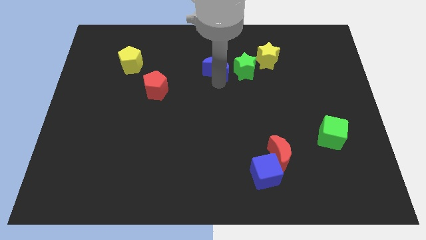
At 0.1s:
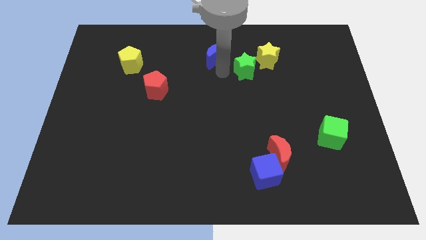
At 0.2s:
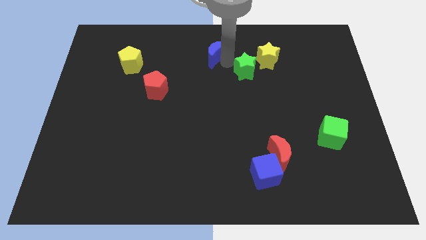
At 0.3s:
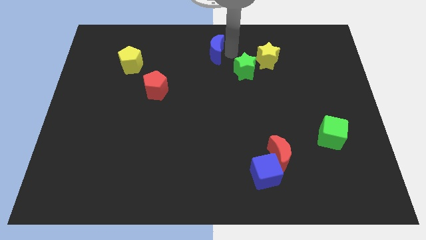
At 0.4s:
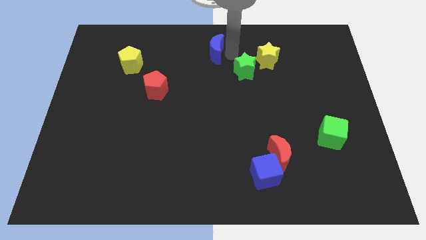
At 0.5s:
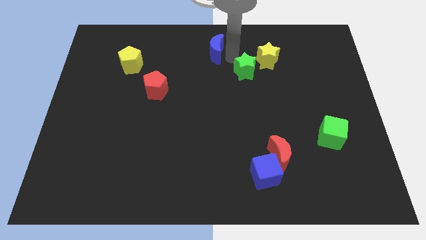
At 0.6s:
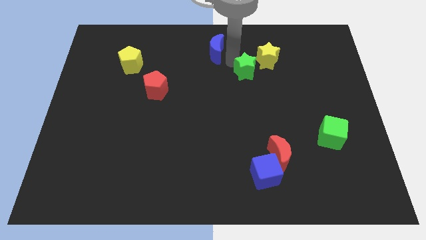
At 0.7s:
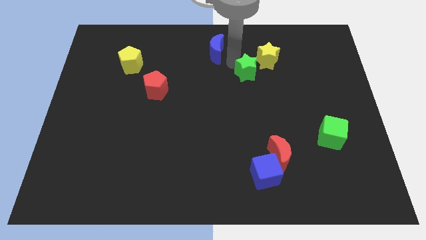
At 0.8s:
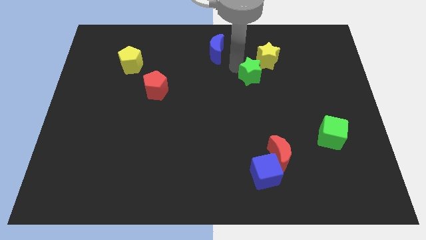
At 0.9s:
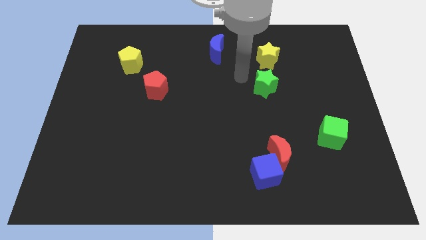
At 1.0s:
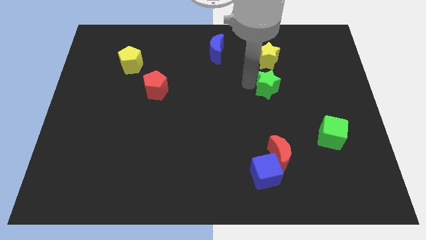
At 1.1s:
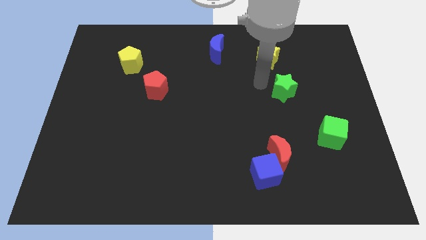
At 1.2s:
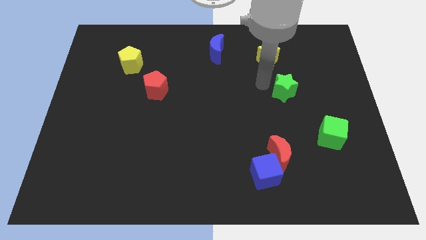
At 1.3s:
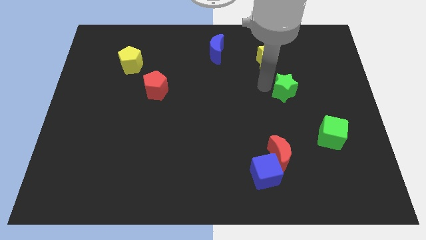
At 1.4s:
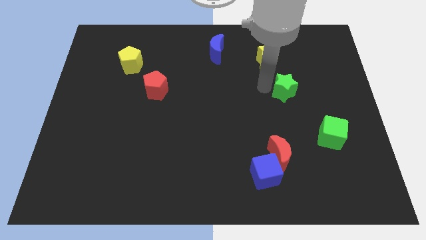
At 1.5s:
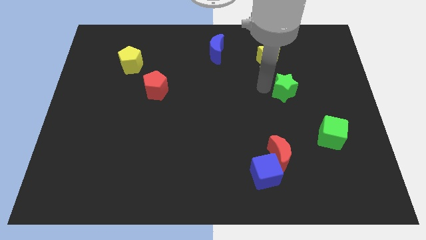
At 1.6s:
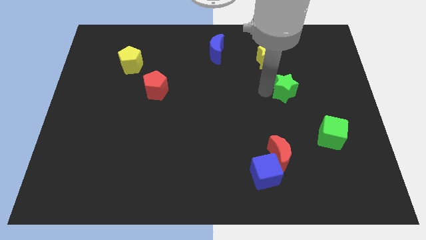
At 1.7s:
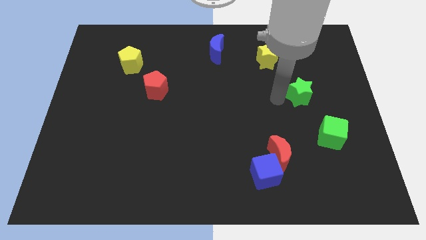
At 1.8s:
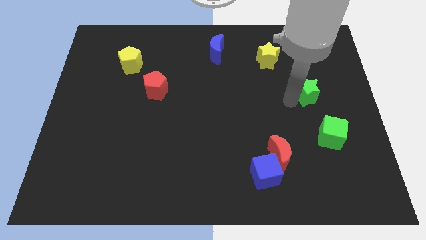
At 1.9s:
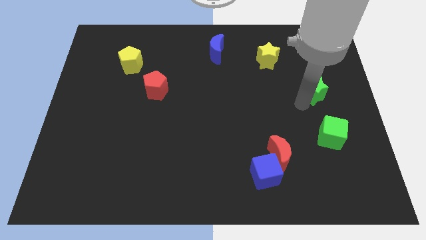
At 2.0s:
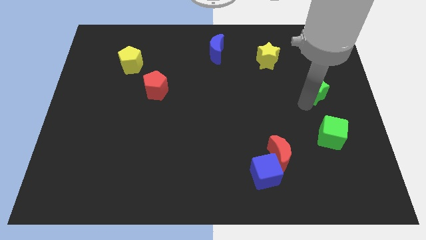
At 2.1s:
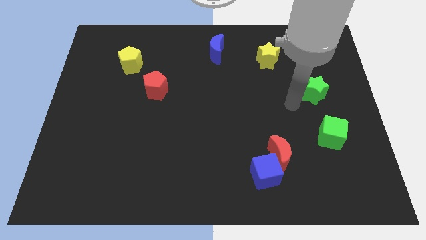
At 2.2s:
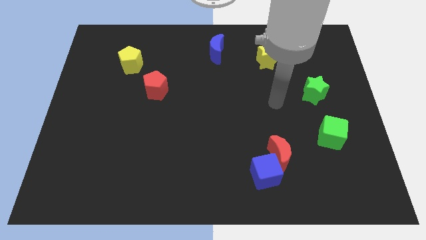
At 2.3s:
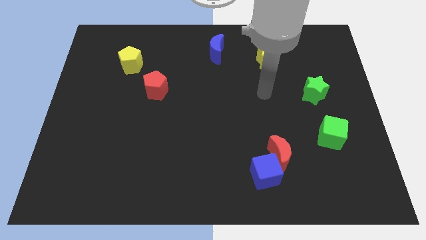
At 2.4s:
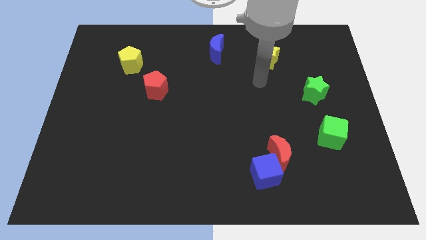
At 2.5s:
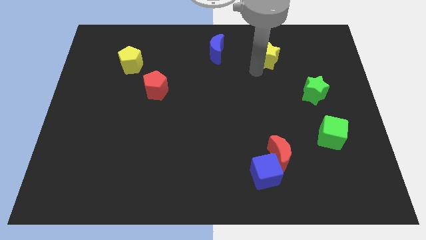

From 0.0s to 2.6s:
place the green star above the green cube

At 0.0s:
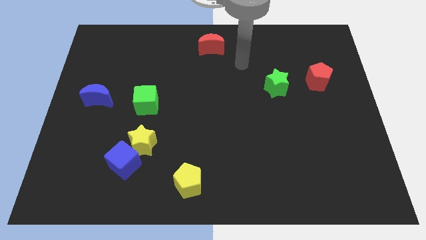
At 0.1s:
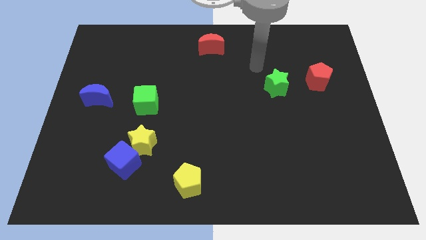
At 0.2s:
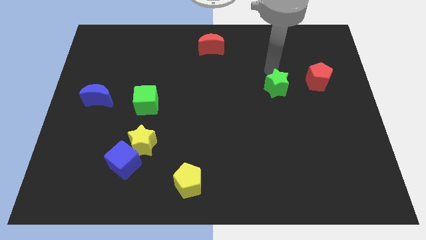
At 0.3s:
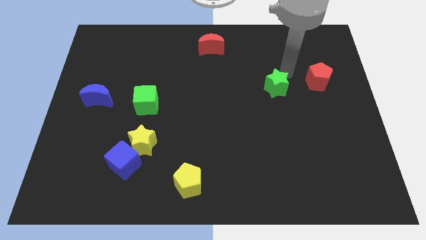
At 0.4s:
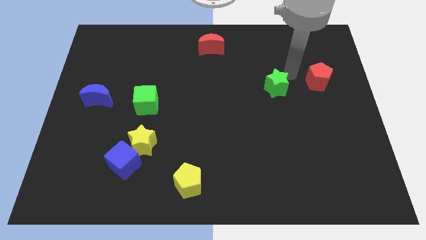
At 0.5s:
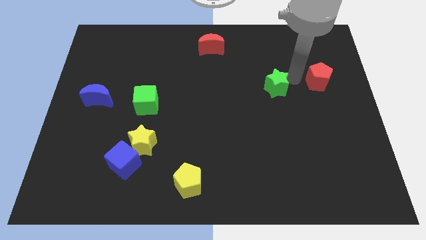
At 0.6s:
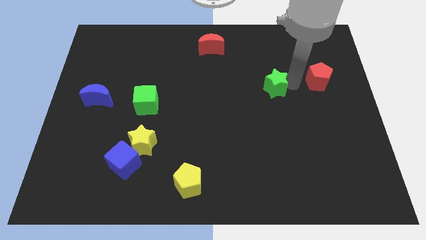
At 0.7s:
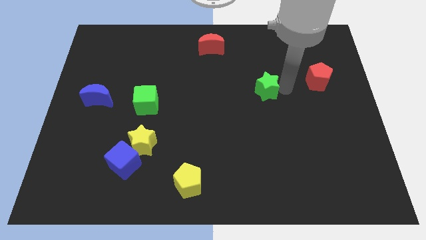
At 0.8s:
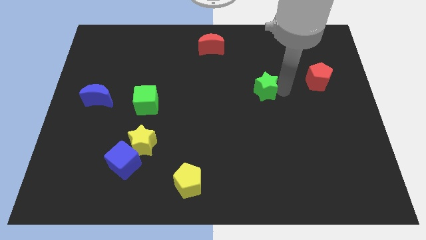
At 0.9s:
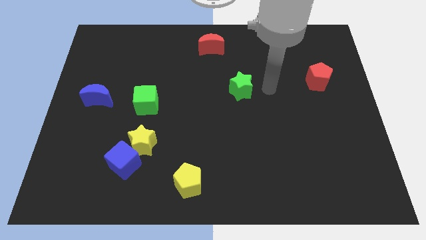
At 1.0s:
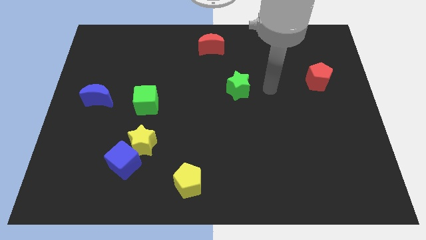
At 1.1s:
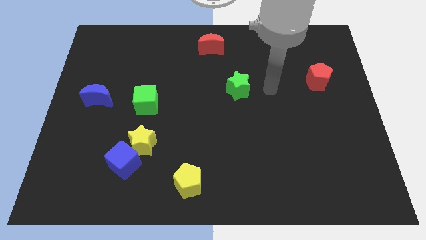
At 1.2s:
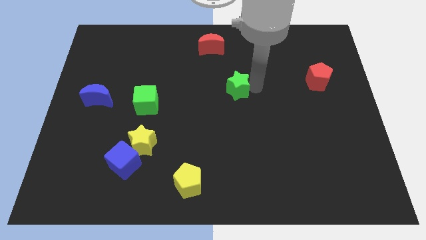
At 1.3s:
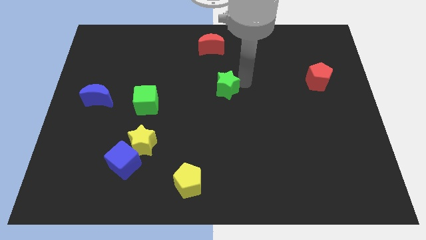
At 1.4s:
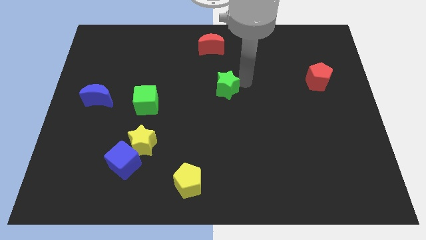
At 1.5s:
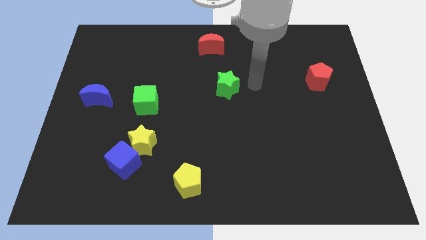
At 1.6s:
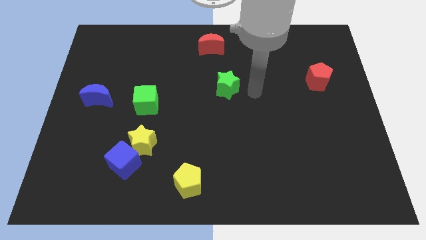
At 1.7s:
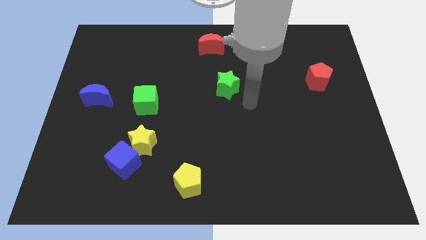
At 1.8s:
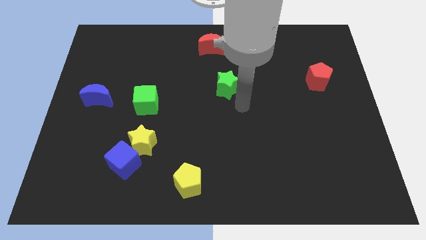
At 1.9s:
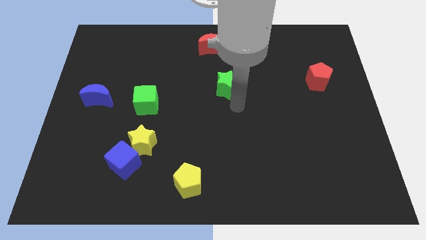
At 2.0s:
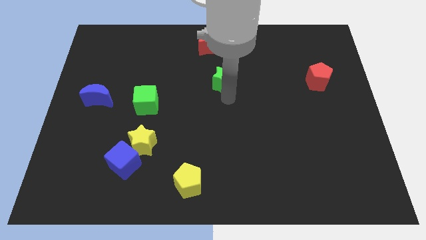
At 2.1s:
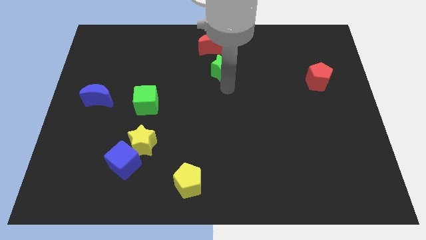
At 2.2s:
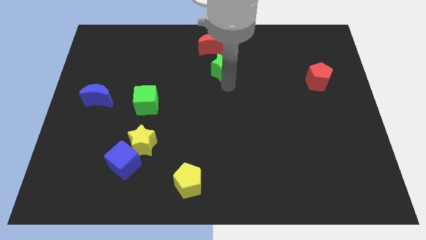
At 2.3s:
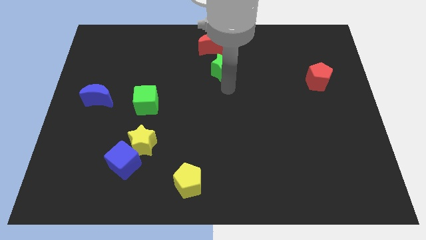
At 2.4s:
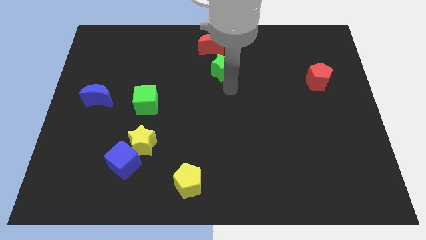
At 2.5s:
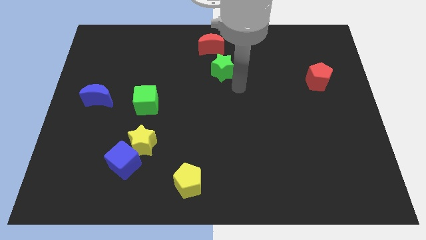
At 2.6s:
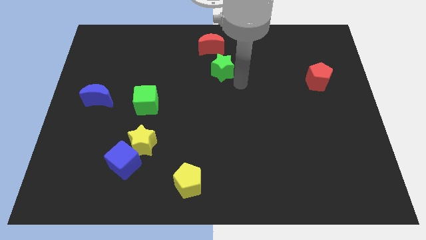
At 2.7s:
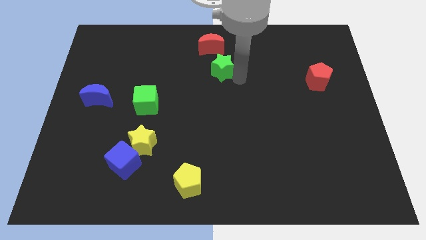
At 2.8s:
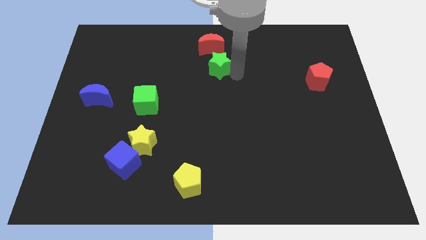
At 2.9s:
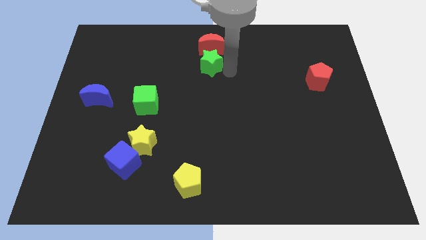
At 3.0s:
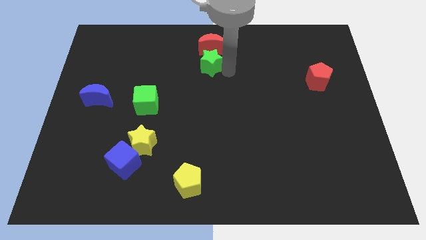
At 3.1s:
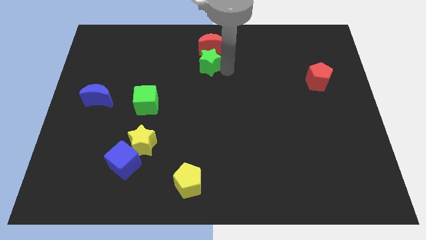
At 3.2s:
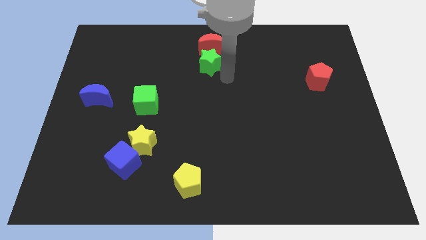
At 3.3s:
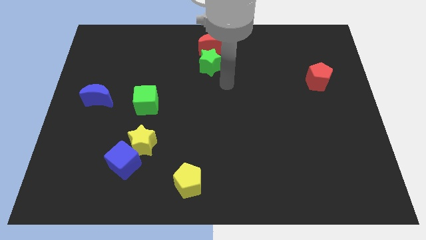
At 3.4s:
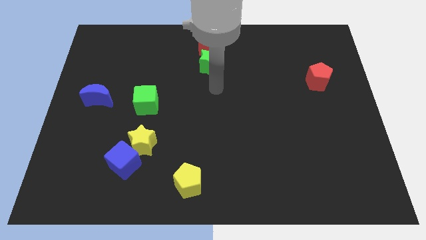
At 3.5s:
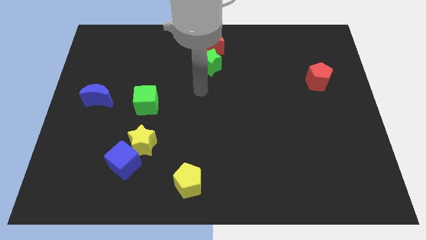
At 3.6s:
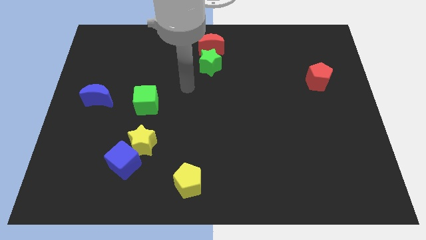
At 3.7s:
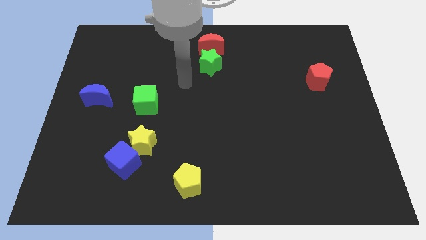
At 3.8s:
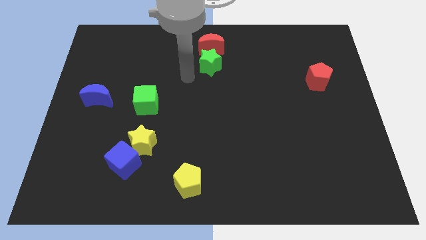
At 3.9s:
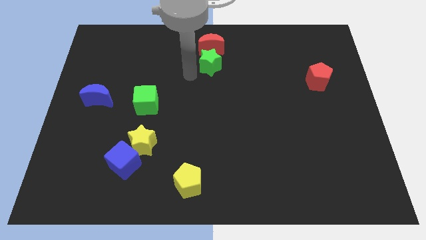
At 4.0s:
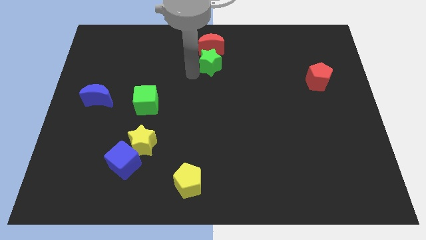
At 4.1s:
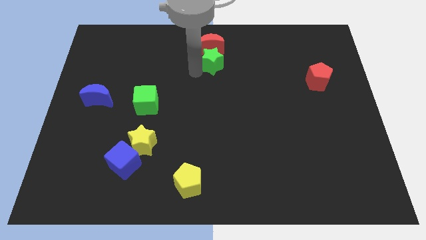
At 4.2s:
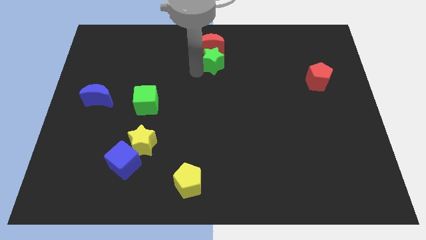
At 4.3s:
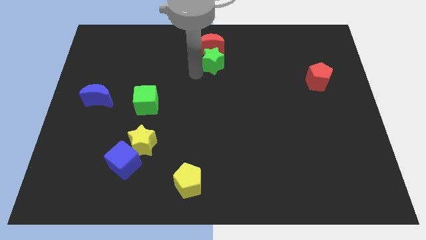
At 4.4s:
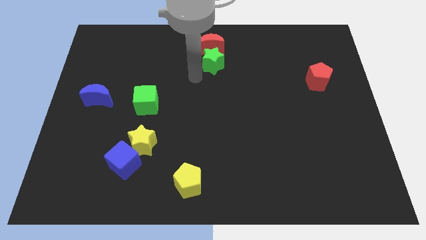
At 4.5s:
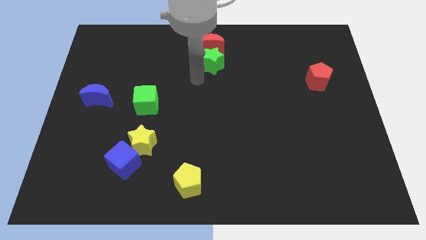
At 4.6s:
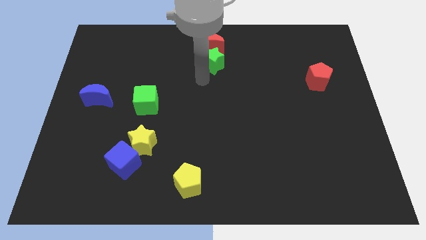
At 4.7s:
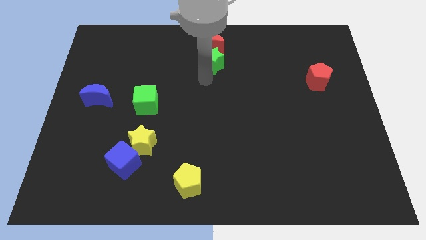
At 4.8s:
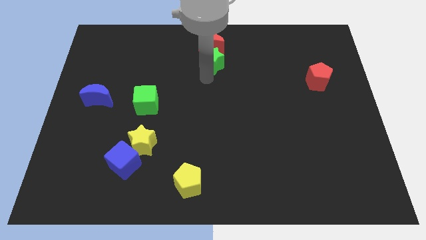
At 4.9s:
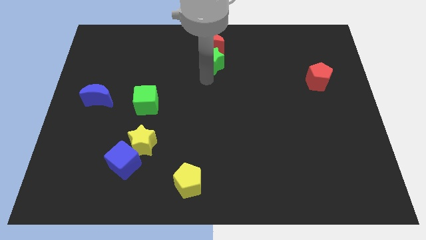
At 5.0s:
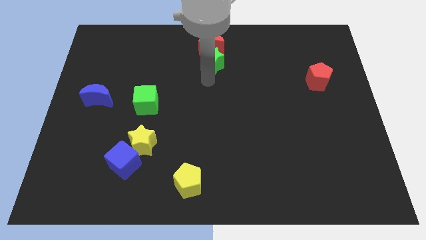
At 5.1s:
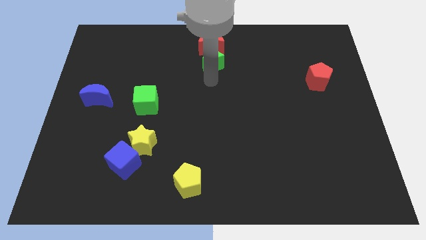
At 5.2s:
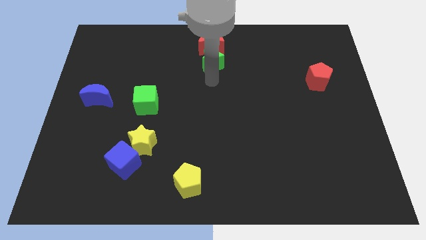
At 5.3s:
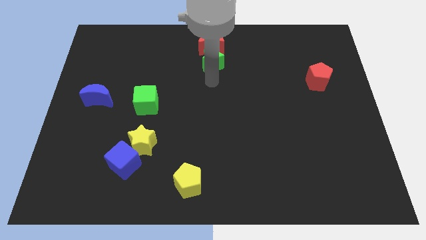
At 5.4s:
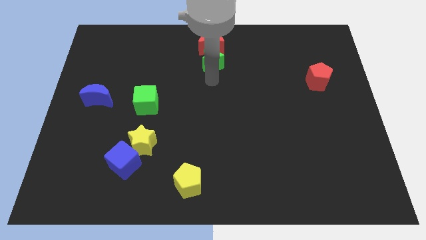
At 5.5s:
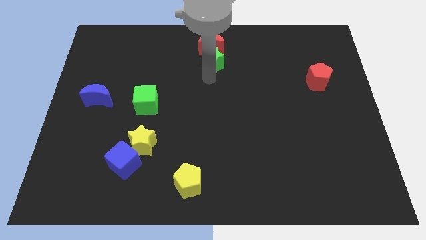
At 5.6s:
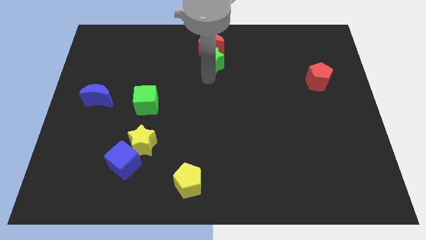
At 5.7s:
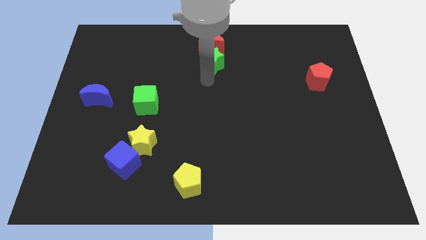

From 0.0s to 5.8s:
move the green star away from the horizontal left of the red pentagon

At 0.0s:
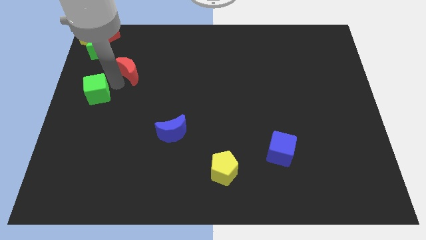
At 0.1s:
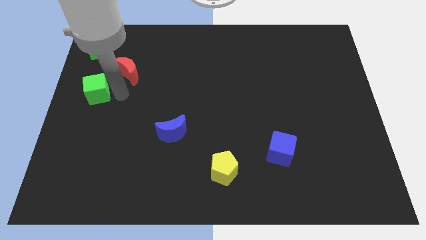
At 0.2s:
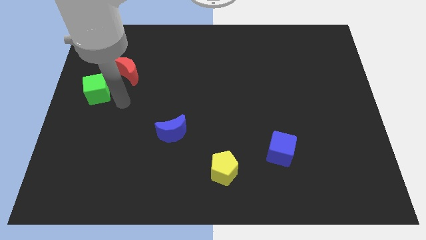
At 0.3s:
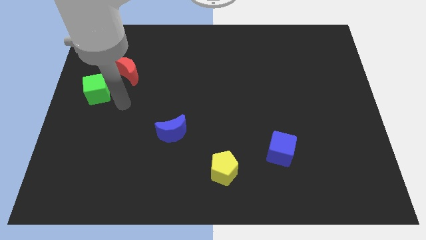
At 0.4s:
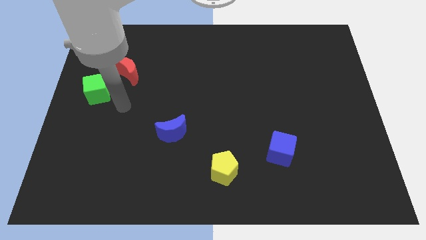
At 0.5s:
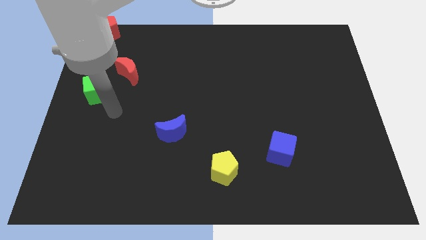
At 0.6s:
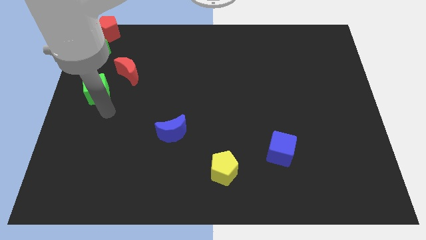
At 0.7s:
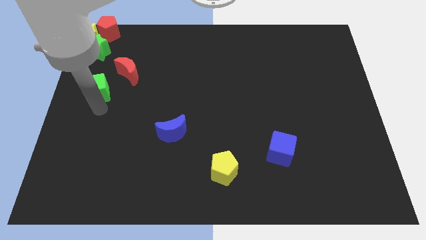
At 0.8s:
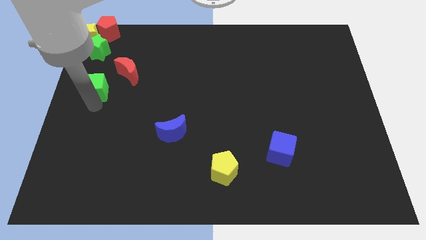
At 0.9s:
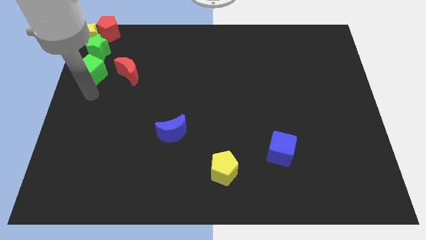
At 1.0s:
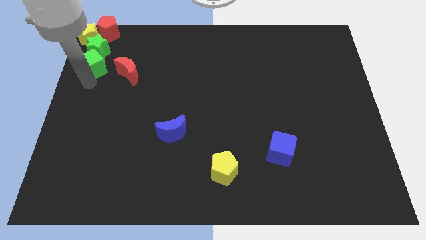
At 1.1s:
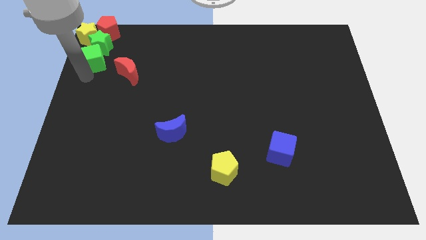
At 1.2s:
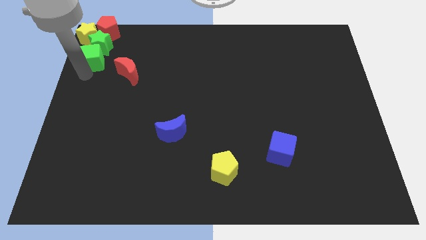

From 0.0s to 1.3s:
move the green cube into the group of blocks
